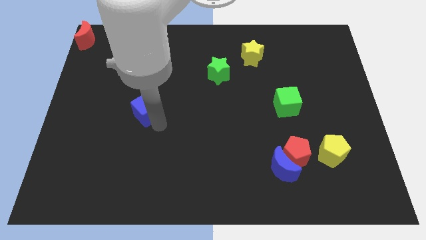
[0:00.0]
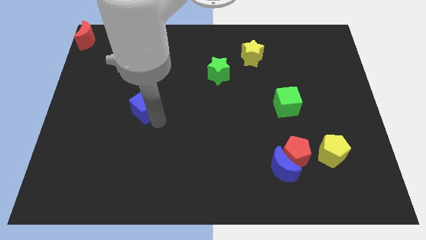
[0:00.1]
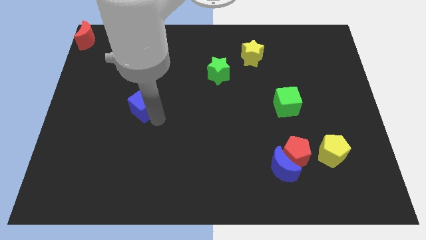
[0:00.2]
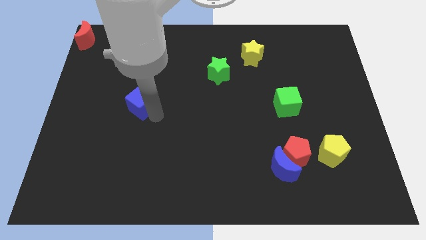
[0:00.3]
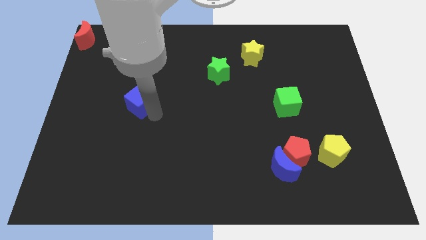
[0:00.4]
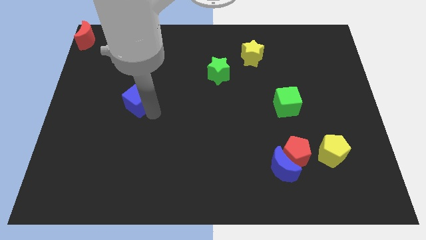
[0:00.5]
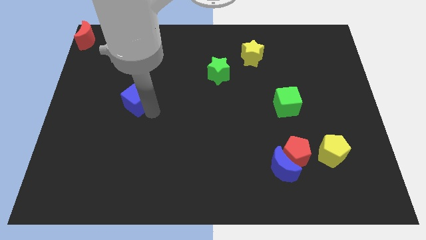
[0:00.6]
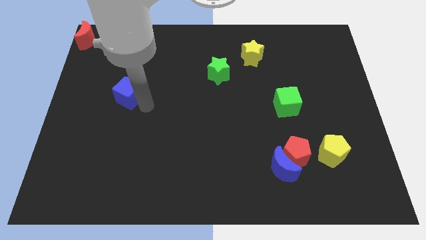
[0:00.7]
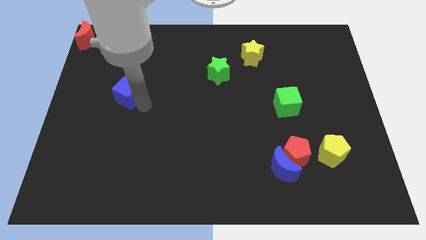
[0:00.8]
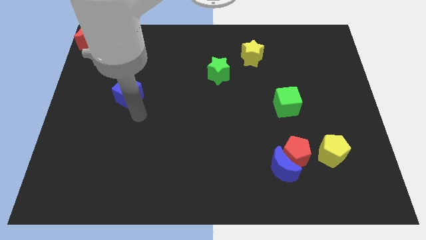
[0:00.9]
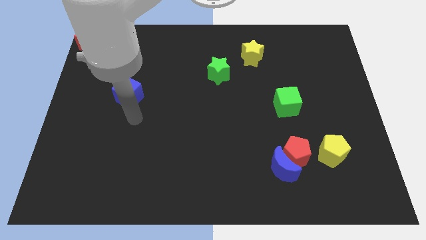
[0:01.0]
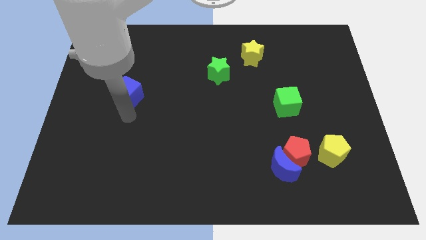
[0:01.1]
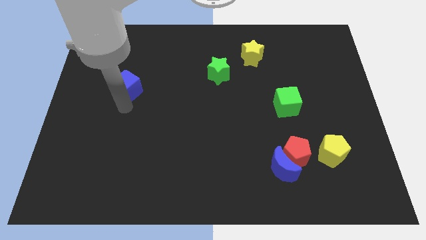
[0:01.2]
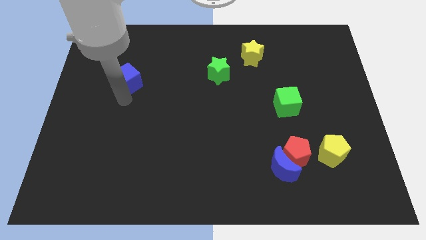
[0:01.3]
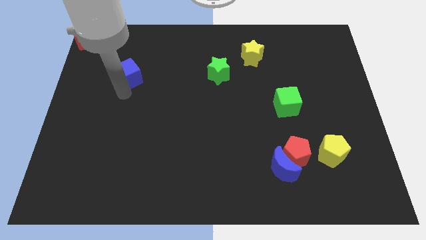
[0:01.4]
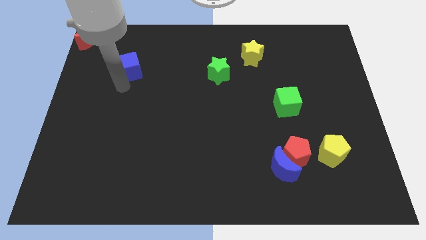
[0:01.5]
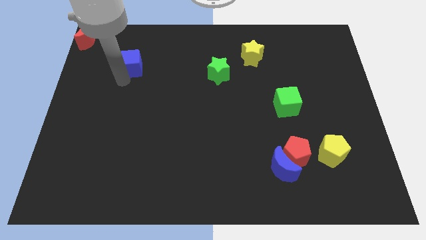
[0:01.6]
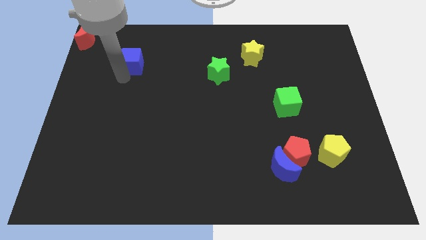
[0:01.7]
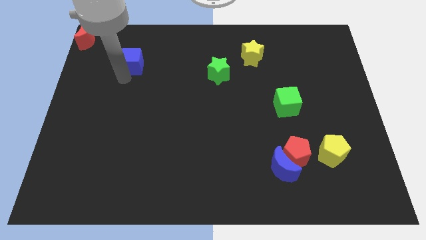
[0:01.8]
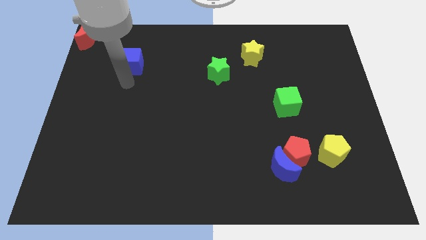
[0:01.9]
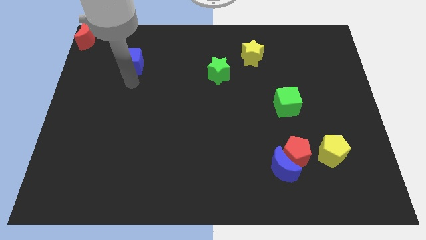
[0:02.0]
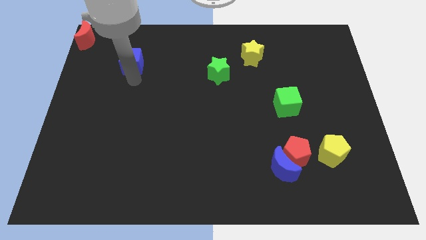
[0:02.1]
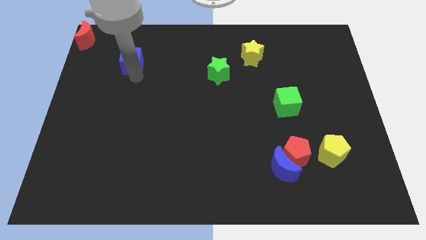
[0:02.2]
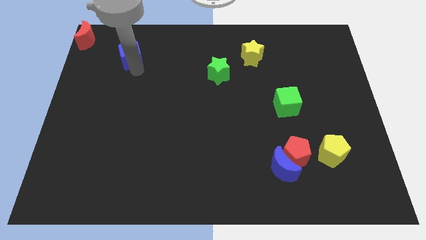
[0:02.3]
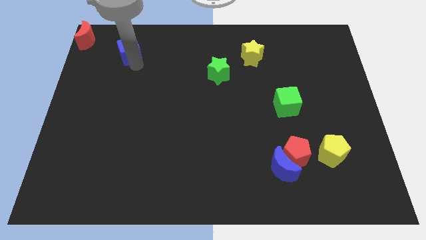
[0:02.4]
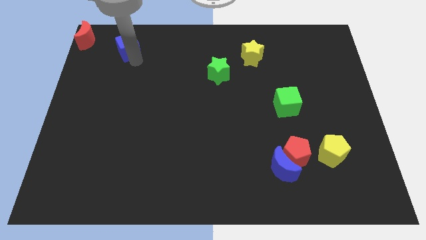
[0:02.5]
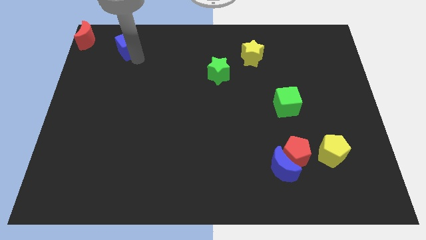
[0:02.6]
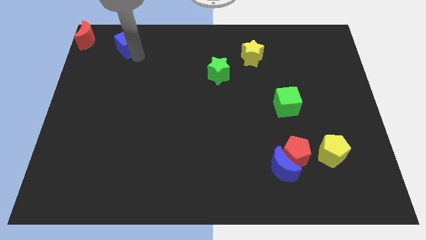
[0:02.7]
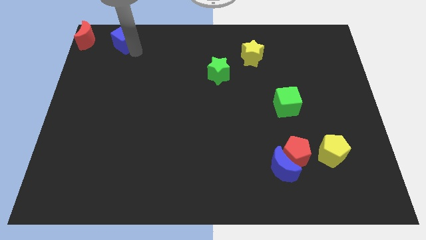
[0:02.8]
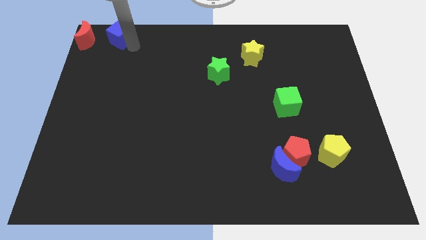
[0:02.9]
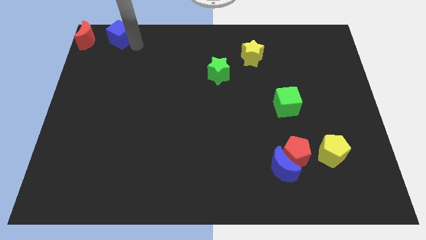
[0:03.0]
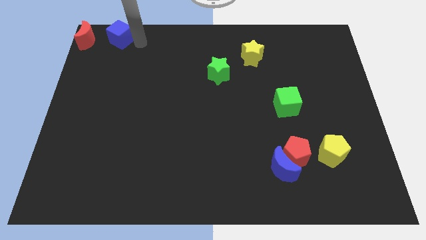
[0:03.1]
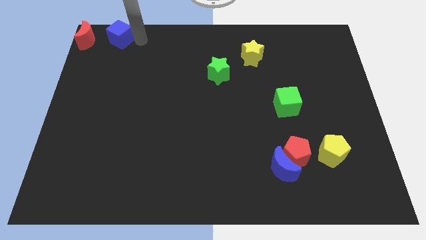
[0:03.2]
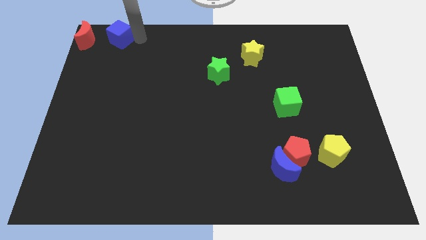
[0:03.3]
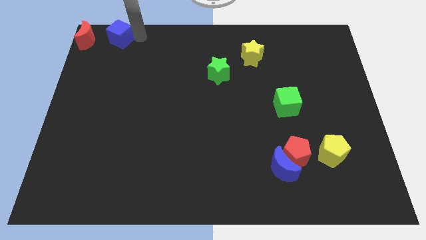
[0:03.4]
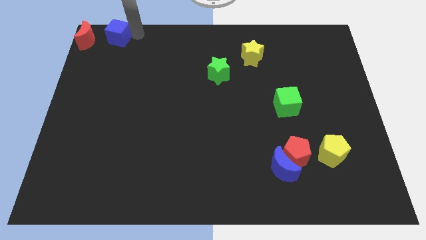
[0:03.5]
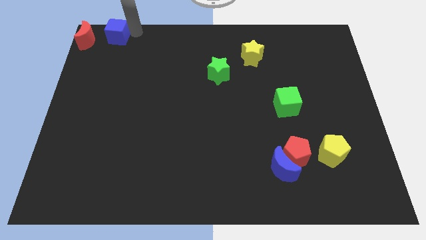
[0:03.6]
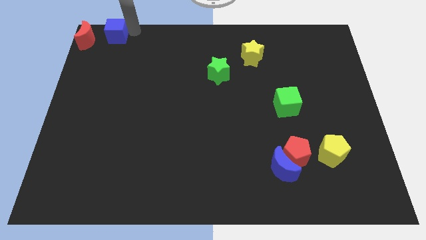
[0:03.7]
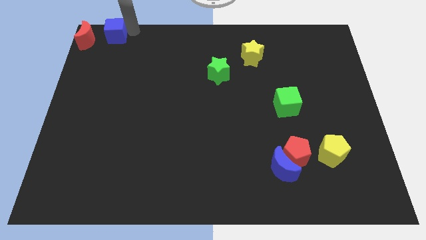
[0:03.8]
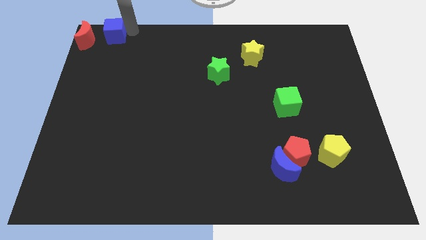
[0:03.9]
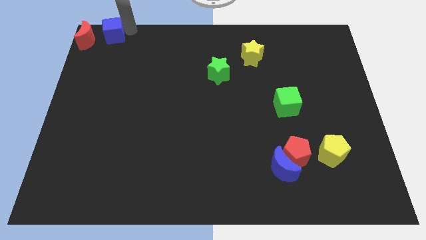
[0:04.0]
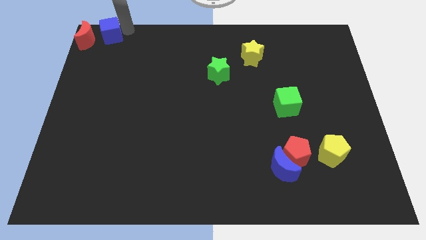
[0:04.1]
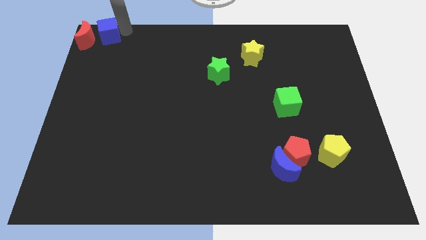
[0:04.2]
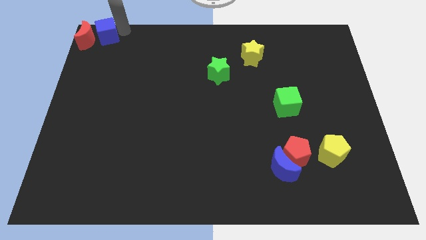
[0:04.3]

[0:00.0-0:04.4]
move the blue cube to the right of the red crescent

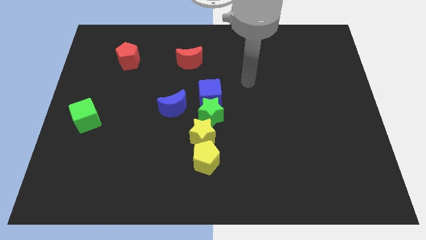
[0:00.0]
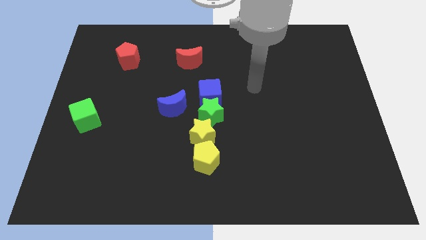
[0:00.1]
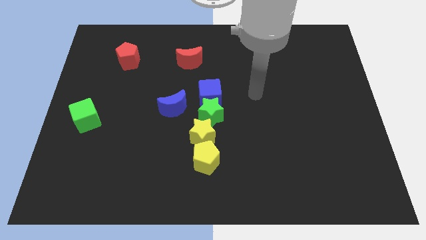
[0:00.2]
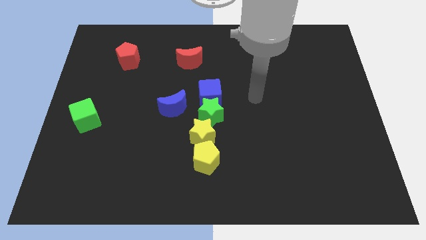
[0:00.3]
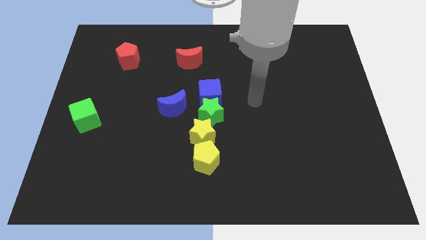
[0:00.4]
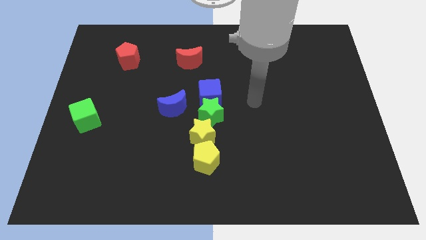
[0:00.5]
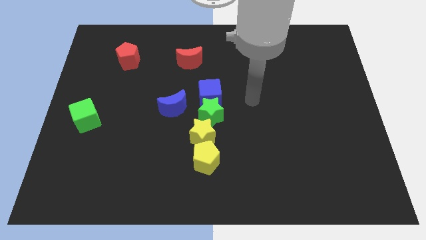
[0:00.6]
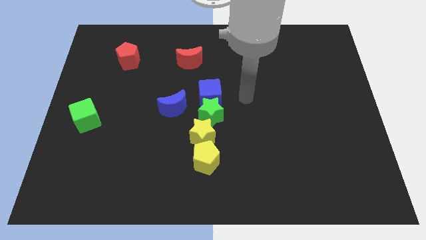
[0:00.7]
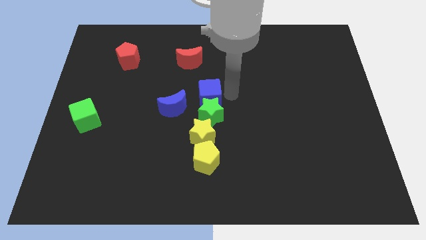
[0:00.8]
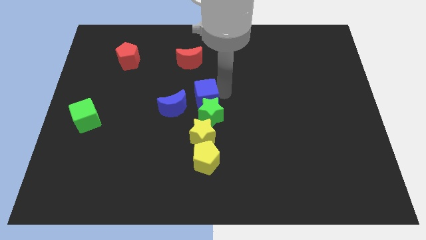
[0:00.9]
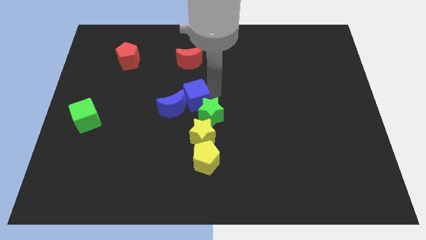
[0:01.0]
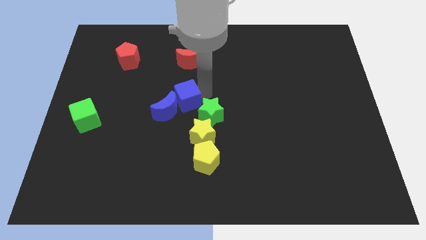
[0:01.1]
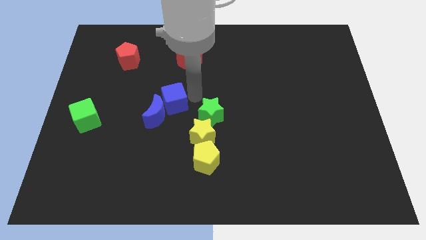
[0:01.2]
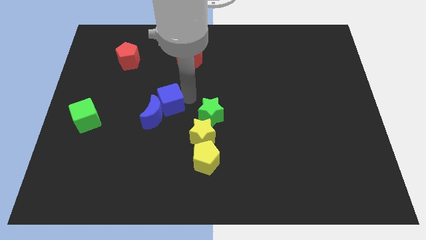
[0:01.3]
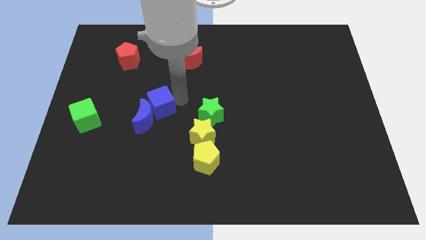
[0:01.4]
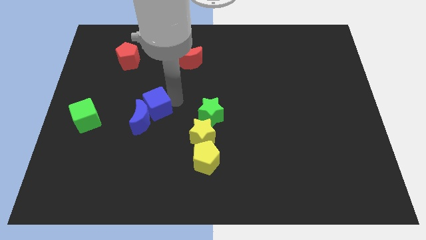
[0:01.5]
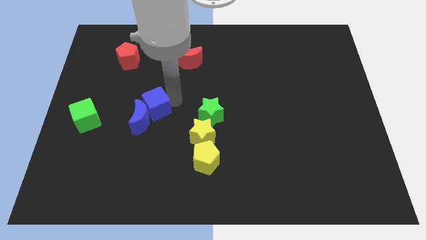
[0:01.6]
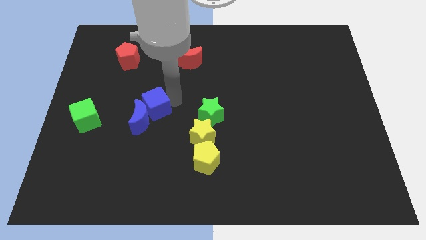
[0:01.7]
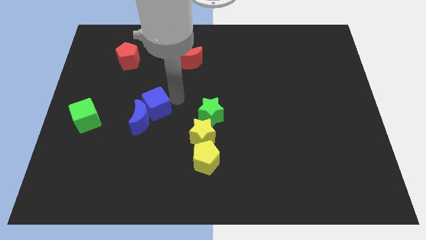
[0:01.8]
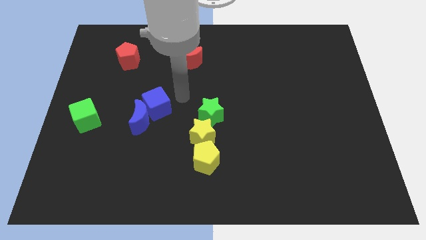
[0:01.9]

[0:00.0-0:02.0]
slide both the blue blocks horizontally in between both the green blocks

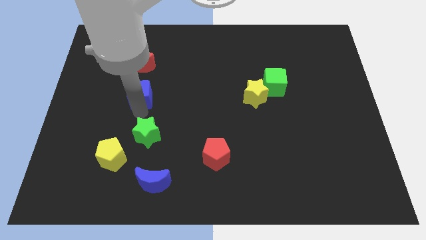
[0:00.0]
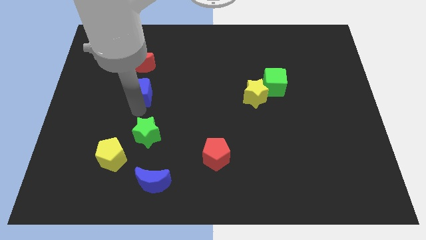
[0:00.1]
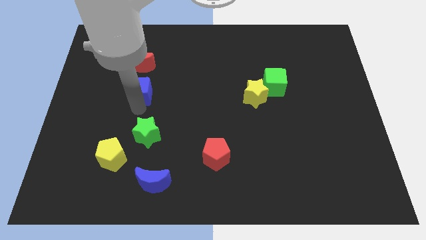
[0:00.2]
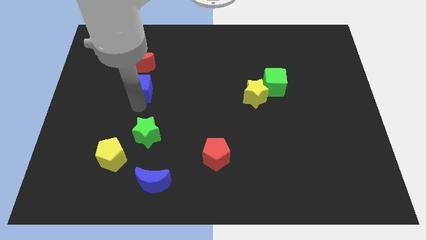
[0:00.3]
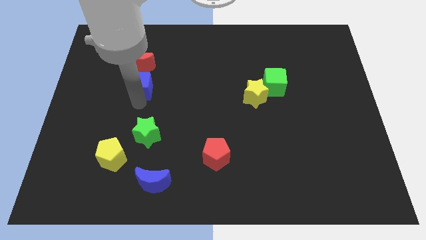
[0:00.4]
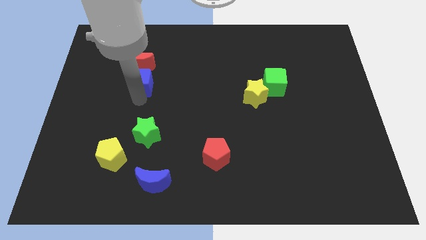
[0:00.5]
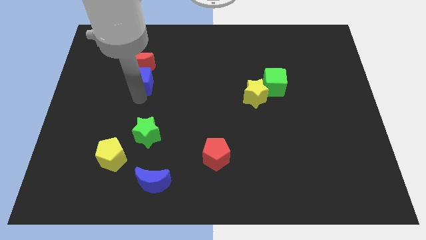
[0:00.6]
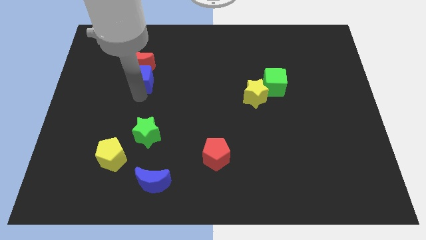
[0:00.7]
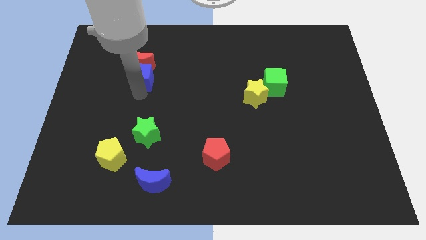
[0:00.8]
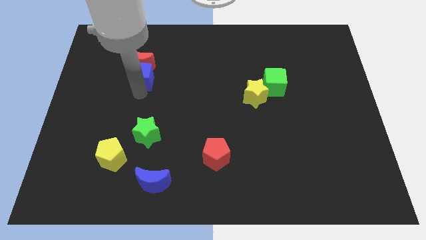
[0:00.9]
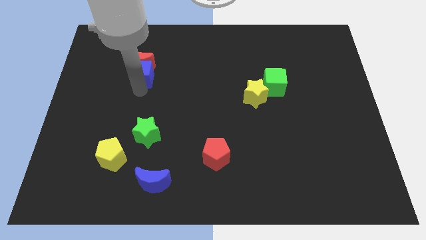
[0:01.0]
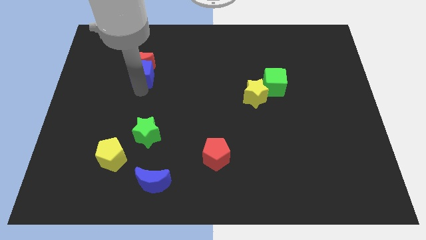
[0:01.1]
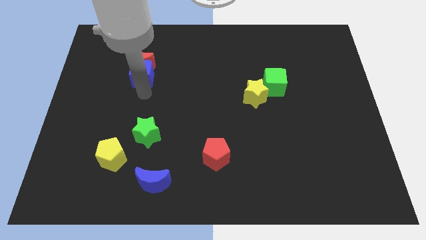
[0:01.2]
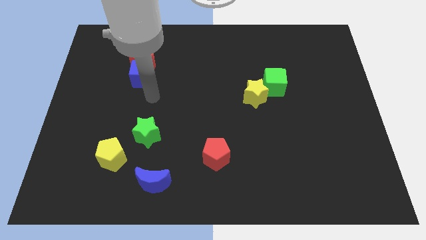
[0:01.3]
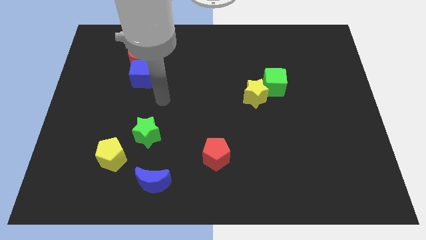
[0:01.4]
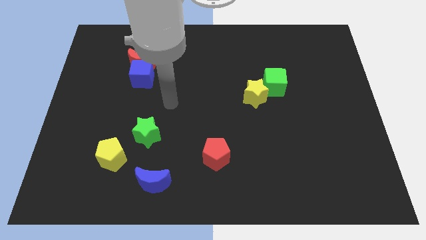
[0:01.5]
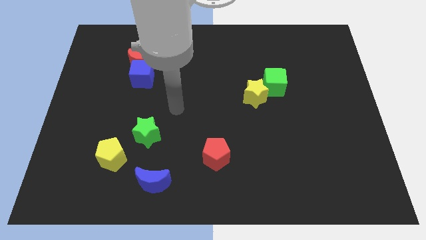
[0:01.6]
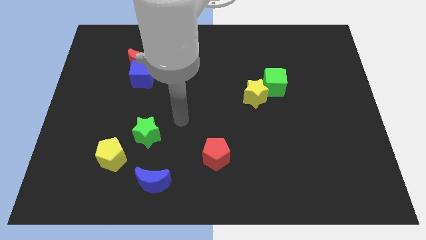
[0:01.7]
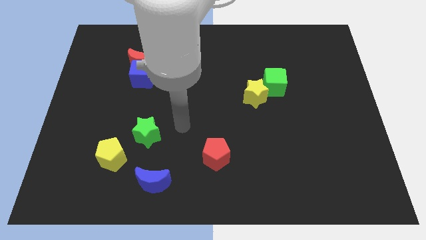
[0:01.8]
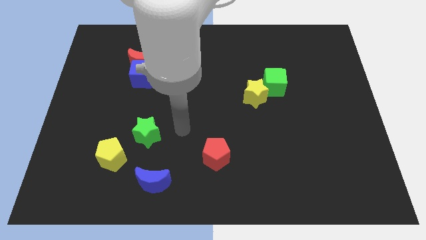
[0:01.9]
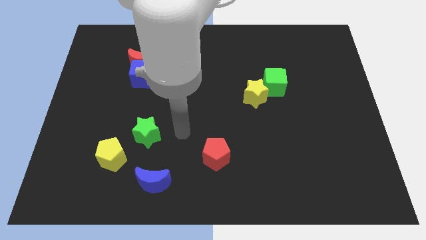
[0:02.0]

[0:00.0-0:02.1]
put the blue cube into the red moon

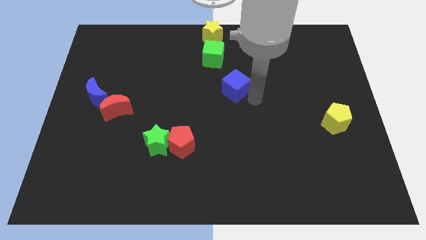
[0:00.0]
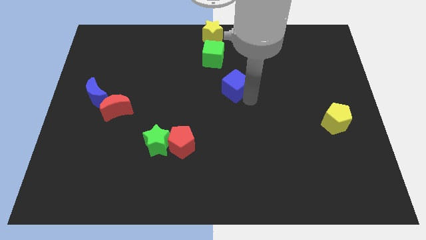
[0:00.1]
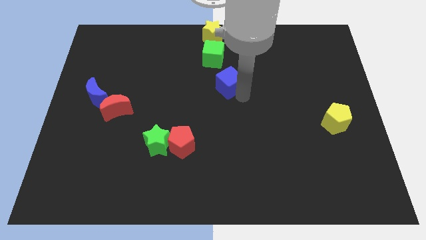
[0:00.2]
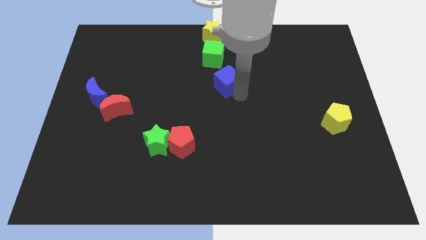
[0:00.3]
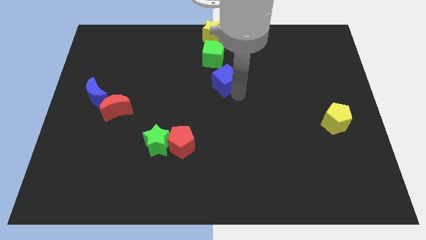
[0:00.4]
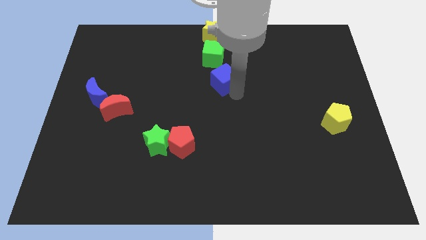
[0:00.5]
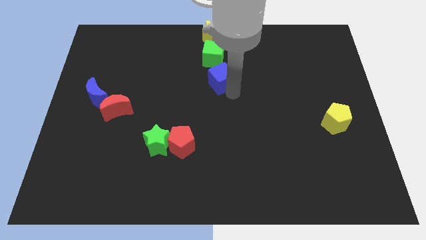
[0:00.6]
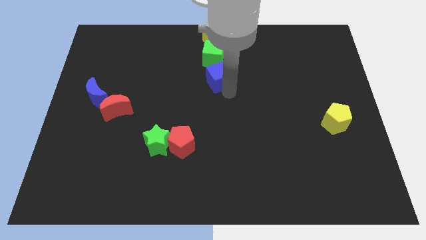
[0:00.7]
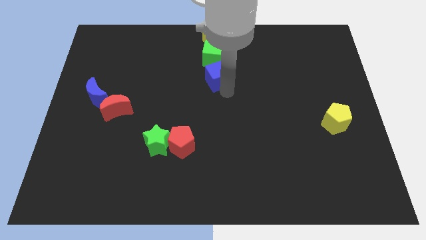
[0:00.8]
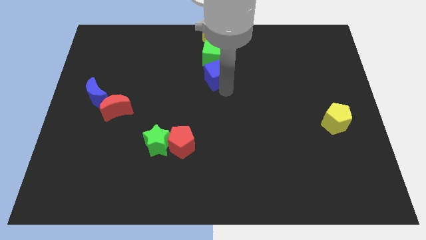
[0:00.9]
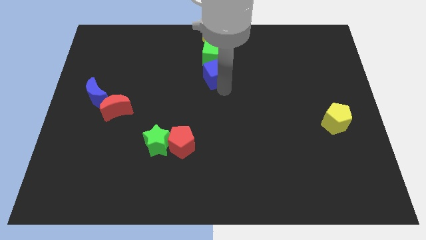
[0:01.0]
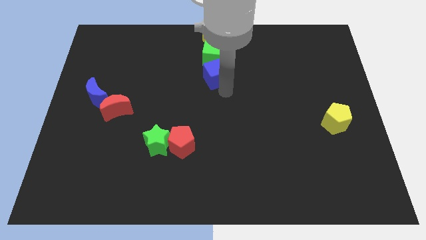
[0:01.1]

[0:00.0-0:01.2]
place the blue cube below to the green cube
